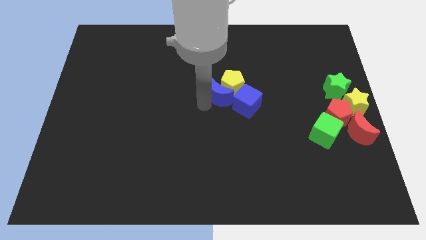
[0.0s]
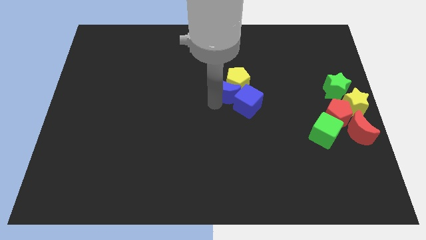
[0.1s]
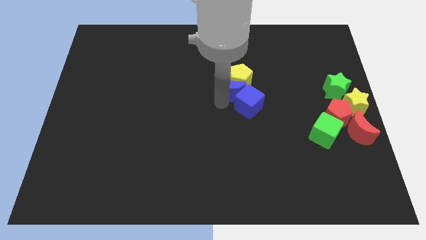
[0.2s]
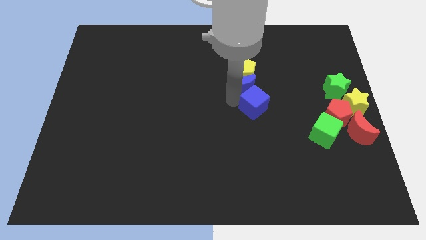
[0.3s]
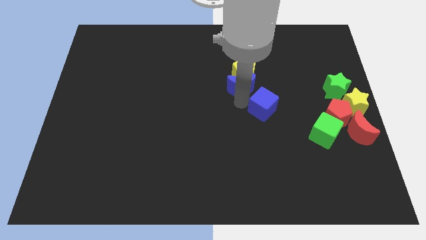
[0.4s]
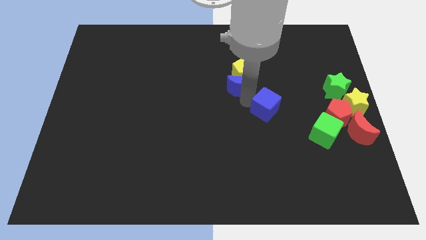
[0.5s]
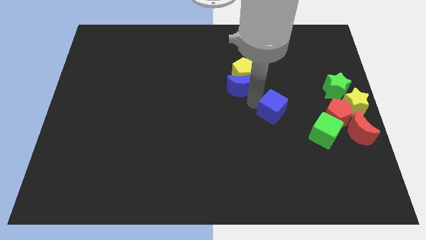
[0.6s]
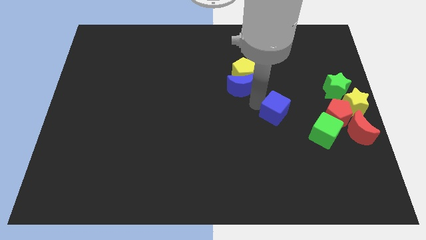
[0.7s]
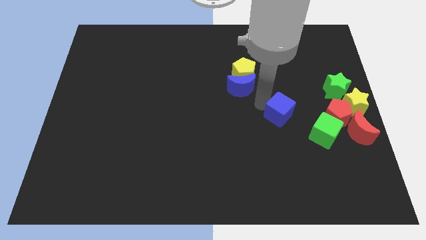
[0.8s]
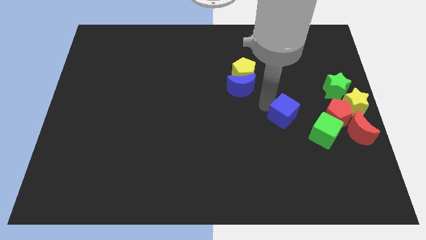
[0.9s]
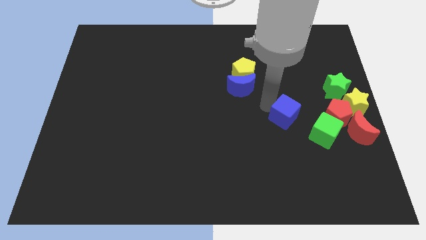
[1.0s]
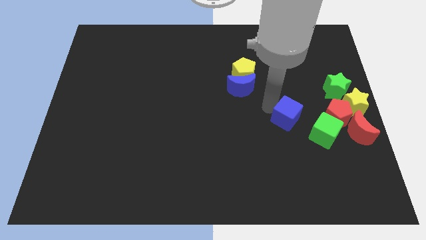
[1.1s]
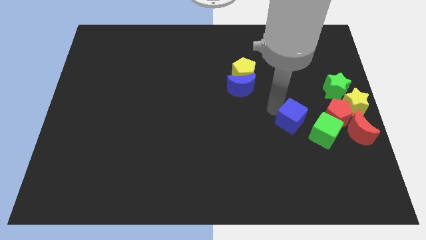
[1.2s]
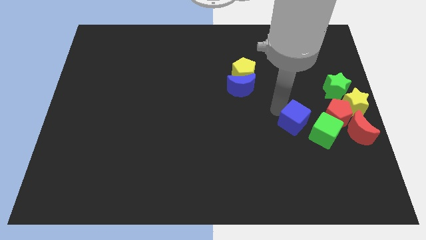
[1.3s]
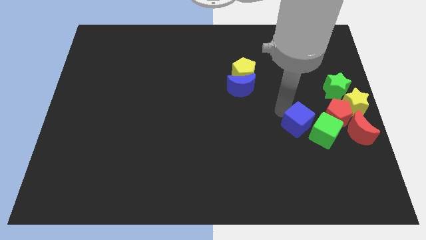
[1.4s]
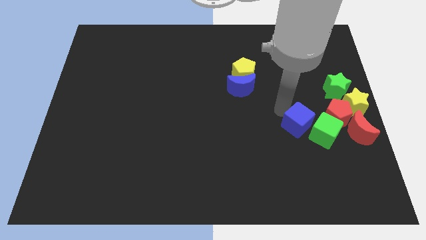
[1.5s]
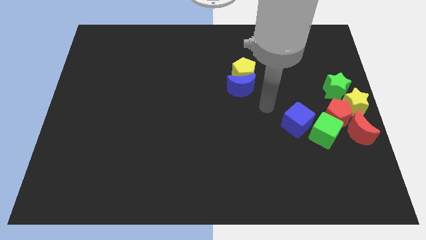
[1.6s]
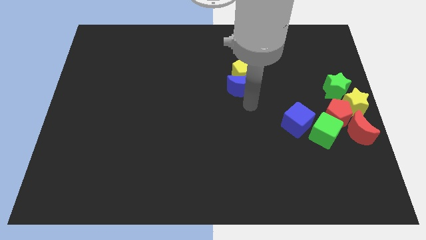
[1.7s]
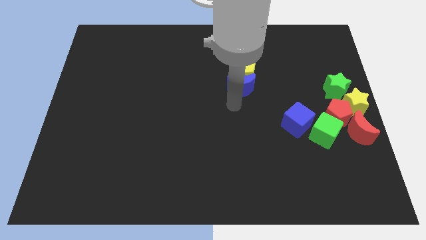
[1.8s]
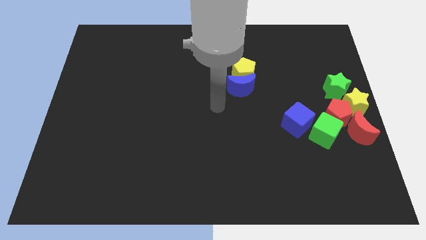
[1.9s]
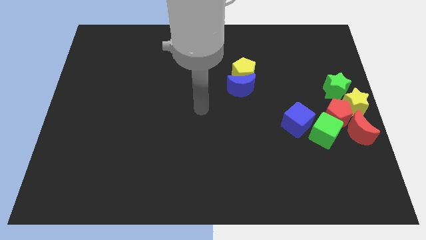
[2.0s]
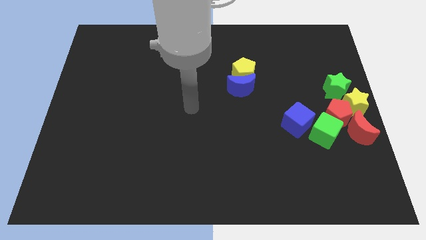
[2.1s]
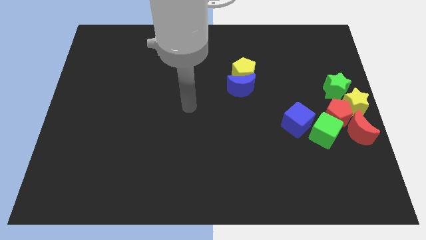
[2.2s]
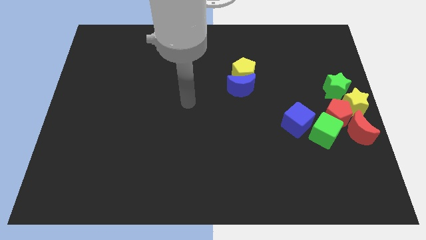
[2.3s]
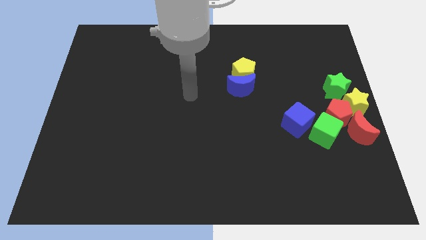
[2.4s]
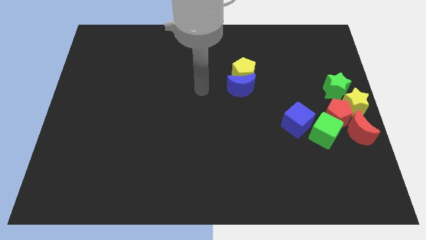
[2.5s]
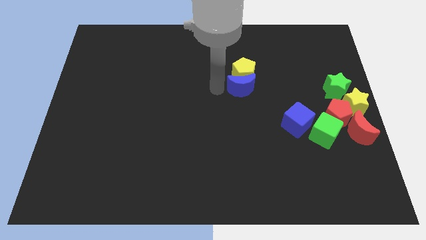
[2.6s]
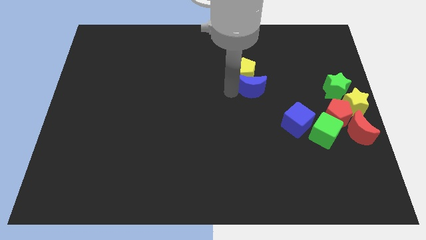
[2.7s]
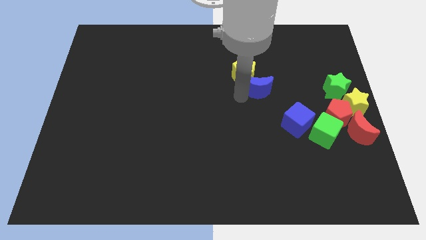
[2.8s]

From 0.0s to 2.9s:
move the blue cube close to the green cube

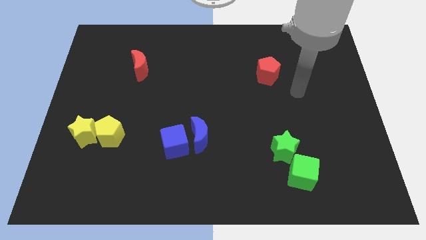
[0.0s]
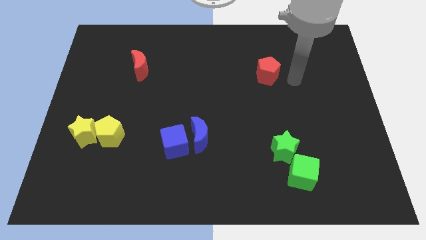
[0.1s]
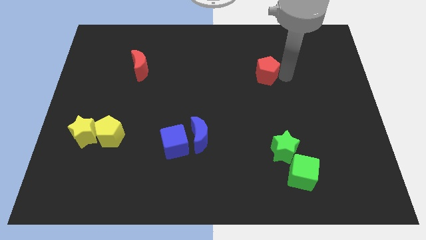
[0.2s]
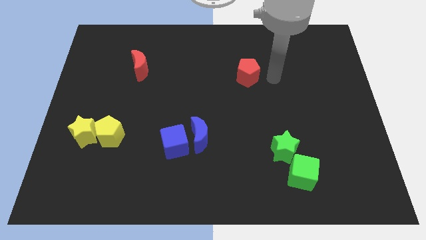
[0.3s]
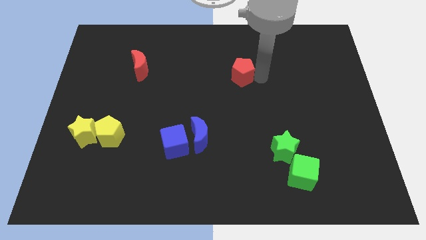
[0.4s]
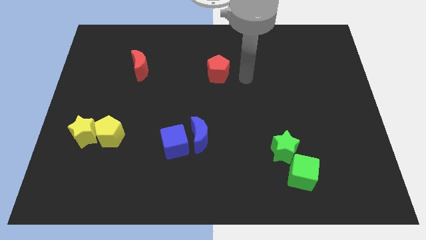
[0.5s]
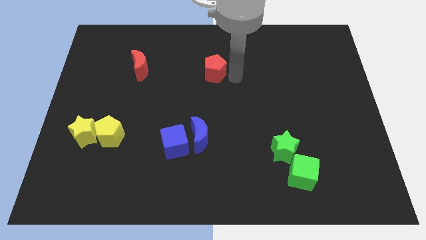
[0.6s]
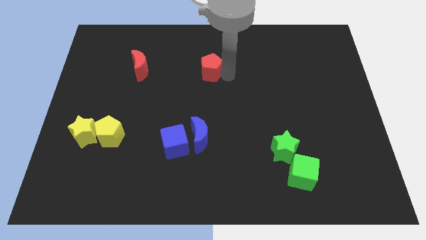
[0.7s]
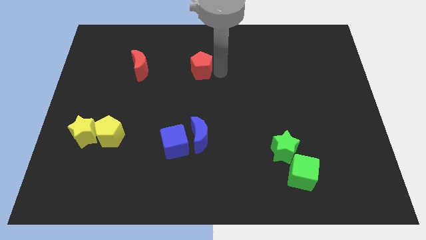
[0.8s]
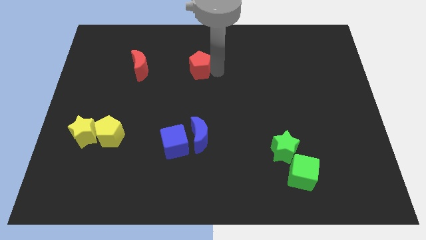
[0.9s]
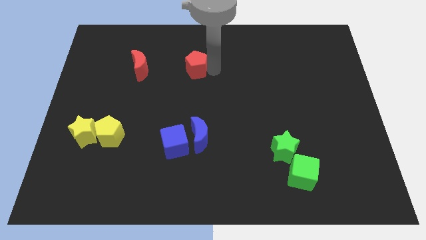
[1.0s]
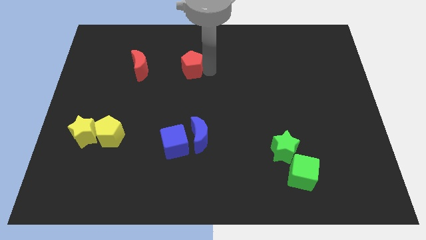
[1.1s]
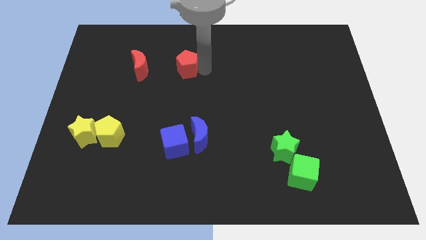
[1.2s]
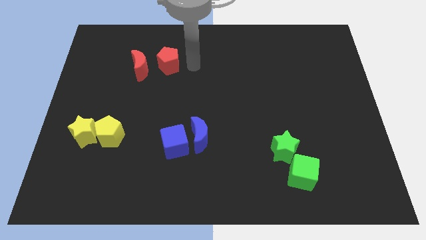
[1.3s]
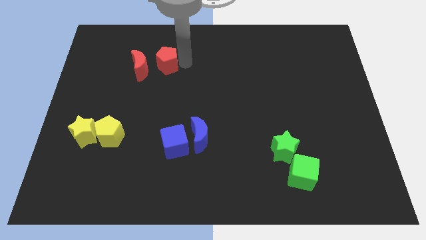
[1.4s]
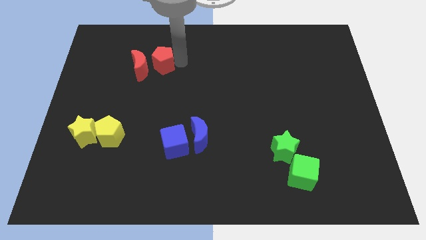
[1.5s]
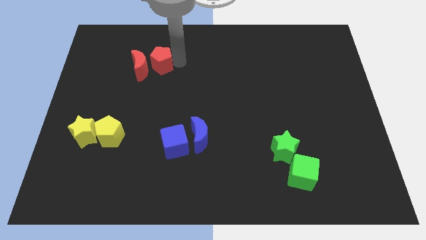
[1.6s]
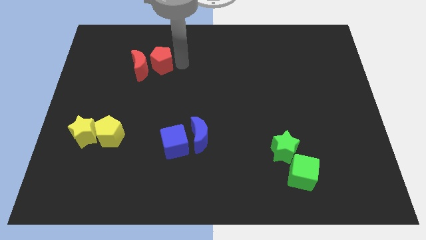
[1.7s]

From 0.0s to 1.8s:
move the red pentagon to the right of red moon

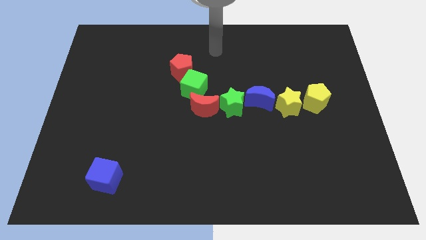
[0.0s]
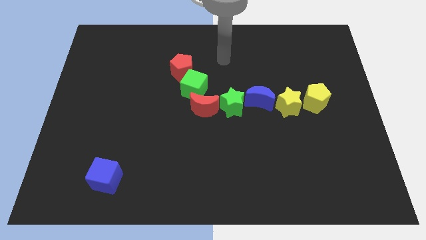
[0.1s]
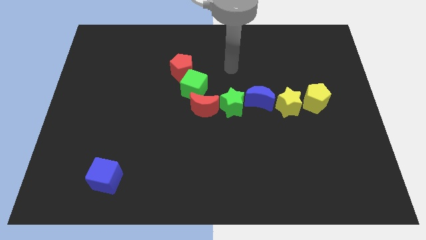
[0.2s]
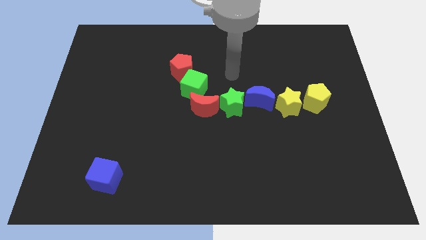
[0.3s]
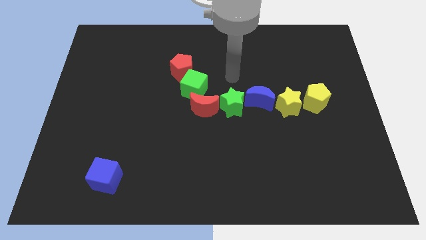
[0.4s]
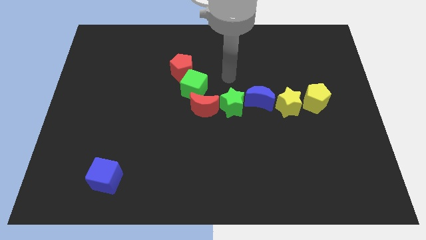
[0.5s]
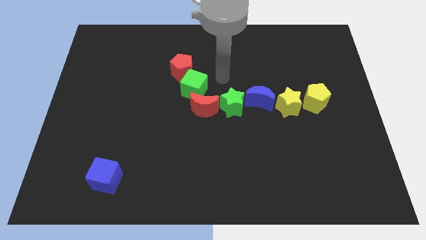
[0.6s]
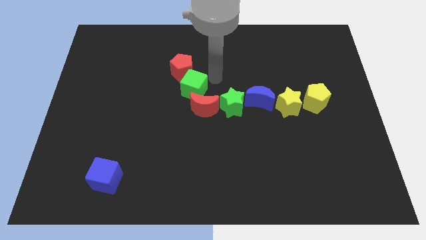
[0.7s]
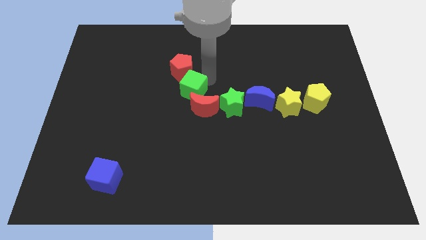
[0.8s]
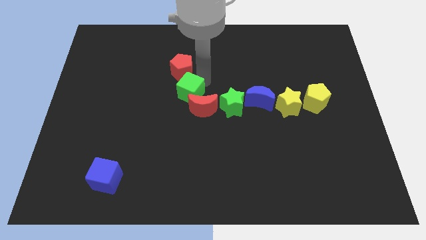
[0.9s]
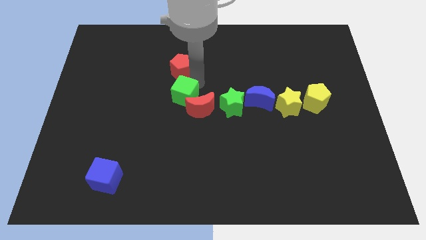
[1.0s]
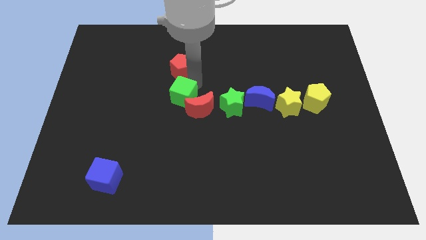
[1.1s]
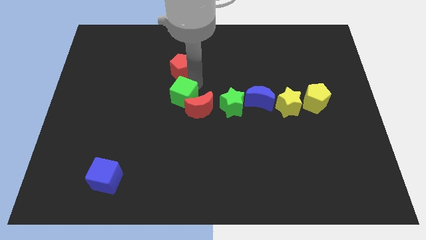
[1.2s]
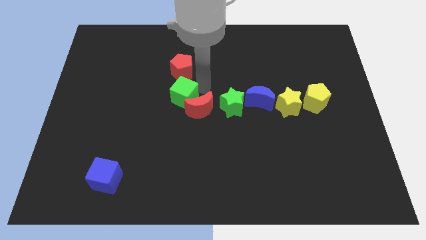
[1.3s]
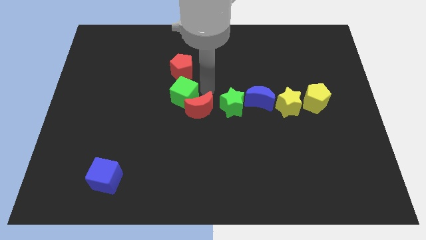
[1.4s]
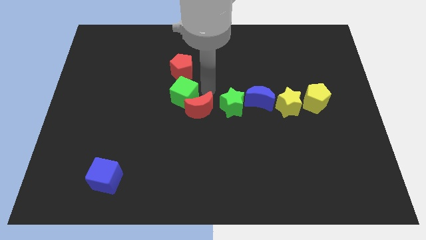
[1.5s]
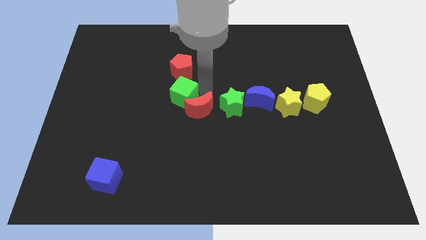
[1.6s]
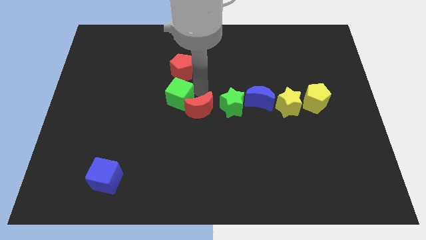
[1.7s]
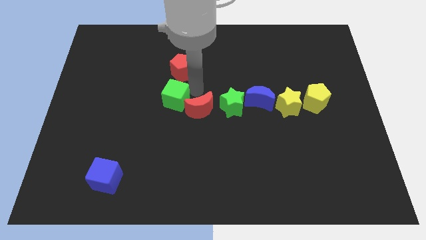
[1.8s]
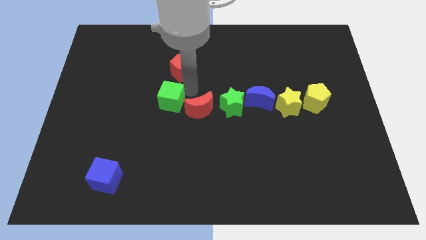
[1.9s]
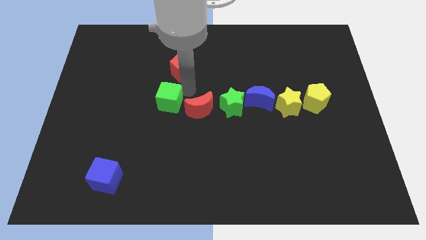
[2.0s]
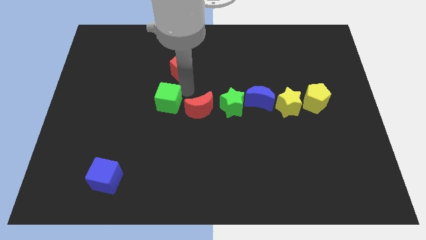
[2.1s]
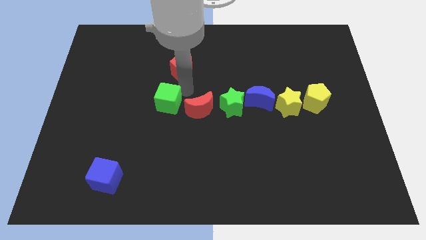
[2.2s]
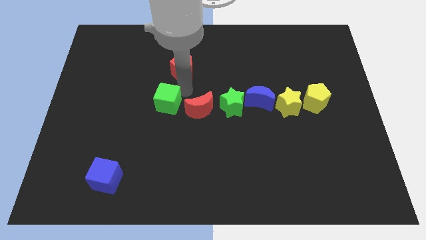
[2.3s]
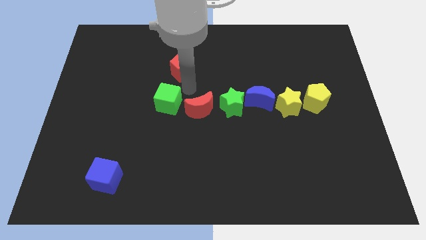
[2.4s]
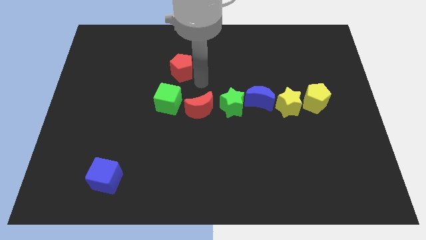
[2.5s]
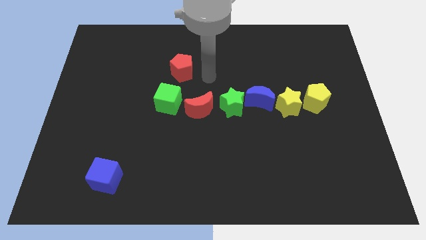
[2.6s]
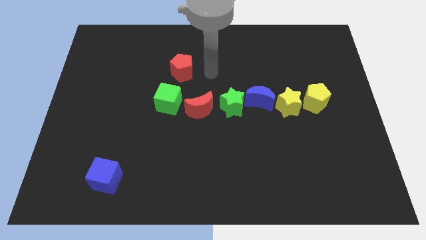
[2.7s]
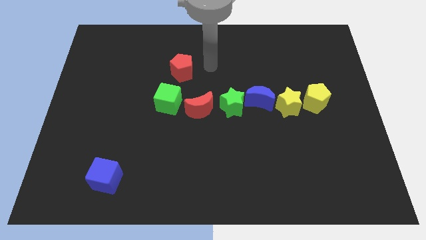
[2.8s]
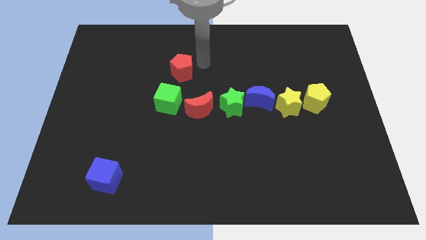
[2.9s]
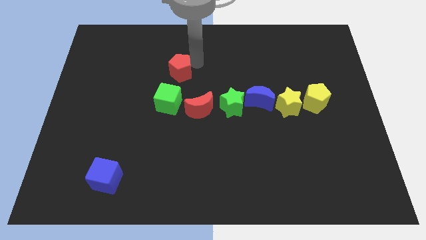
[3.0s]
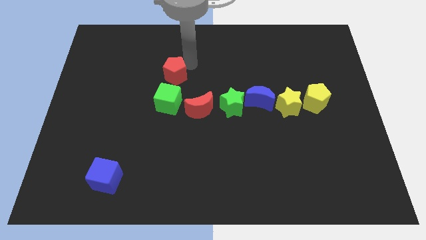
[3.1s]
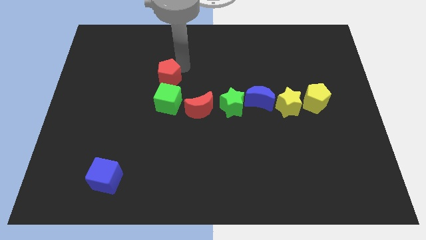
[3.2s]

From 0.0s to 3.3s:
push red pentagon above green cube

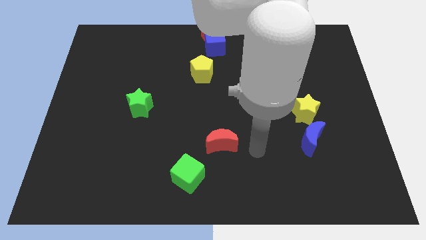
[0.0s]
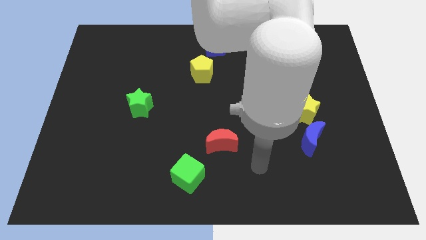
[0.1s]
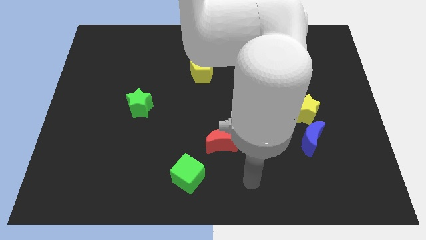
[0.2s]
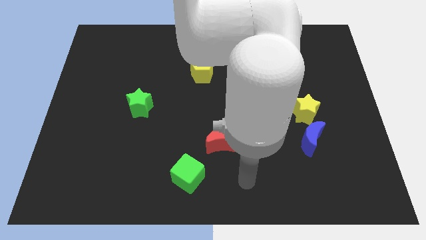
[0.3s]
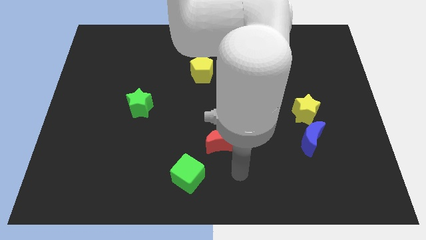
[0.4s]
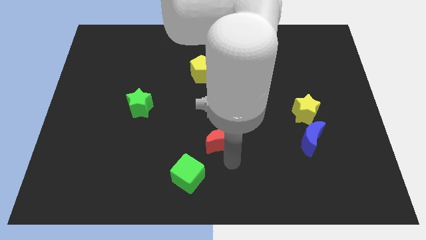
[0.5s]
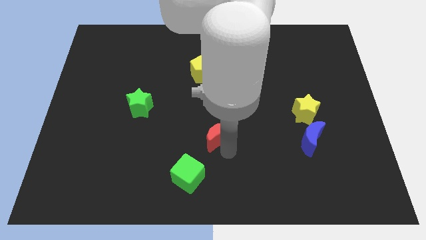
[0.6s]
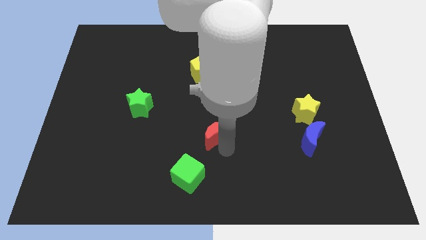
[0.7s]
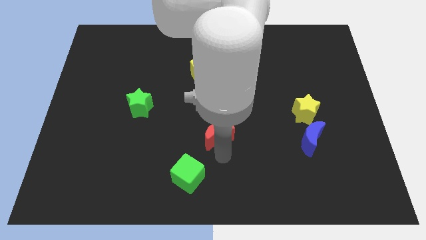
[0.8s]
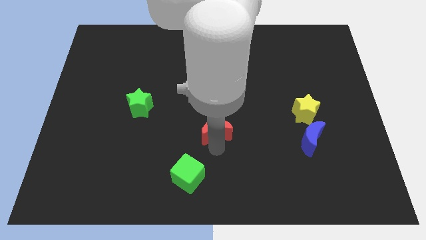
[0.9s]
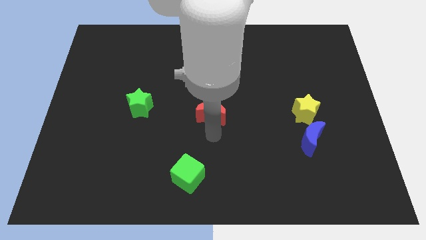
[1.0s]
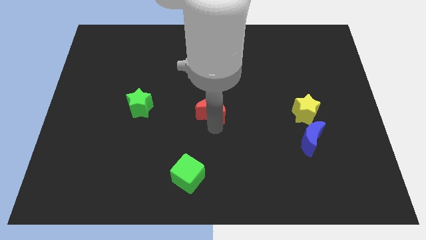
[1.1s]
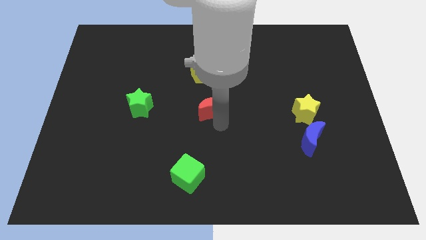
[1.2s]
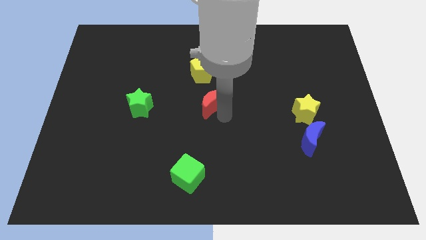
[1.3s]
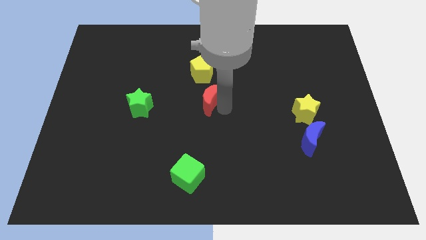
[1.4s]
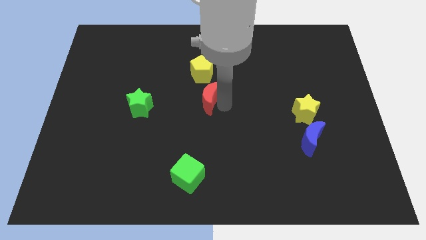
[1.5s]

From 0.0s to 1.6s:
push the red moon towards center
